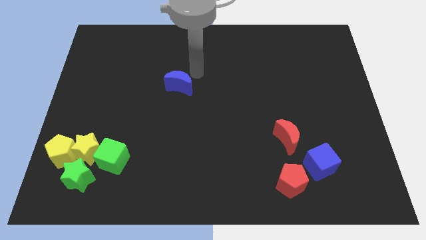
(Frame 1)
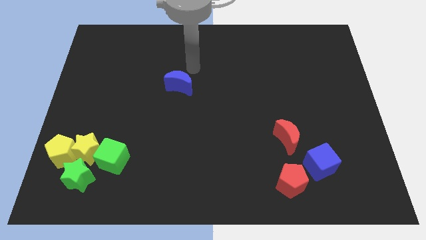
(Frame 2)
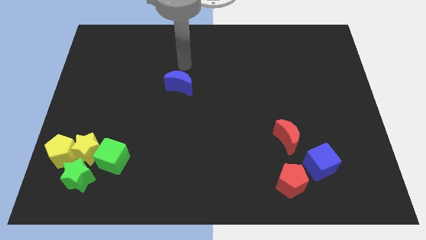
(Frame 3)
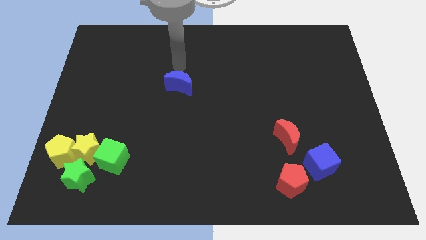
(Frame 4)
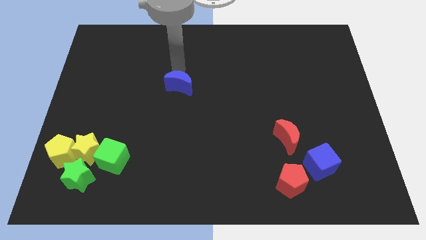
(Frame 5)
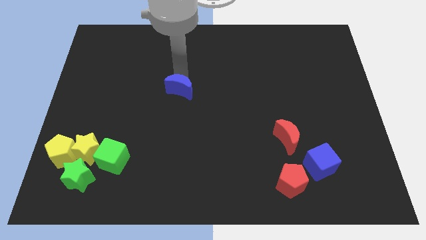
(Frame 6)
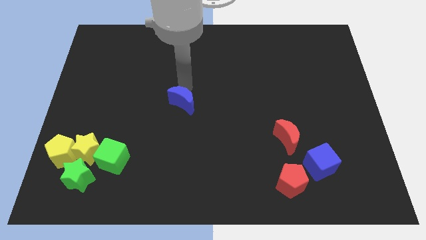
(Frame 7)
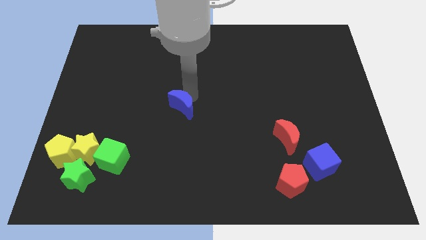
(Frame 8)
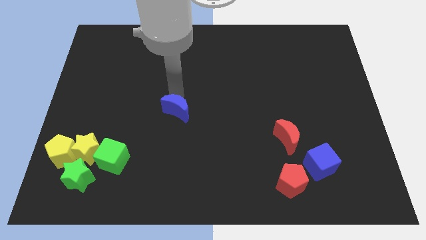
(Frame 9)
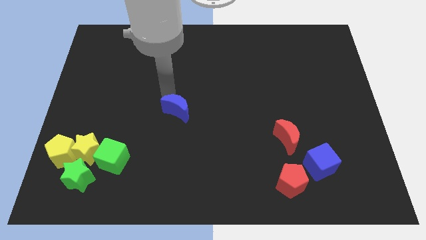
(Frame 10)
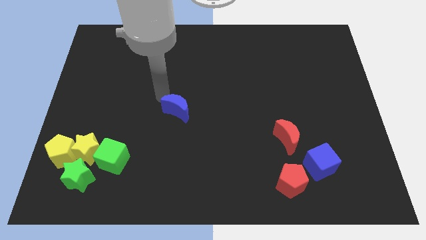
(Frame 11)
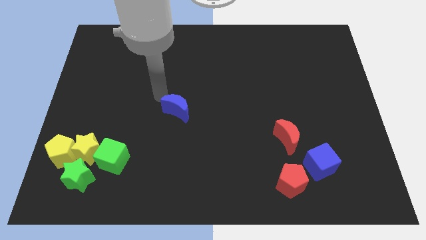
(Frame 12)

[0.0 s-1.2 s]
move the blue crescent to the bottom of the board

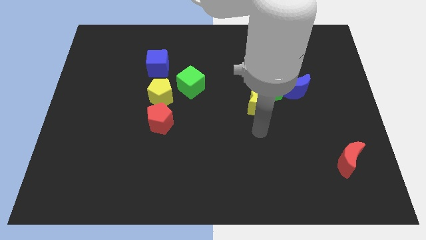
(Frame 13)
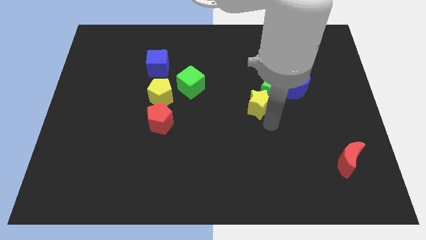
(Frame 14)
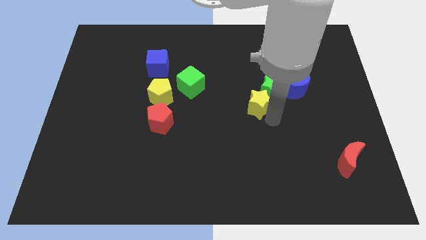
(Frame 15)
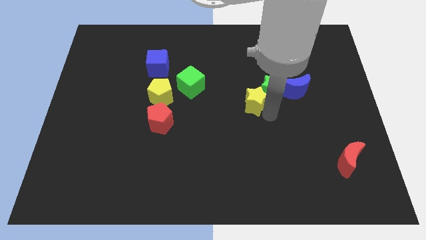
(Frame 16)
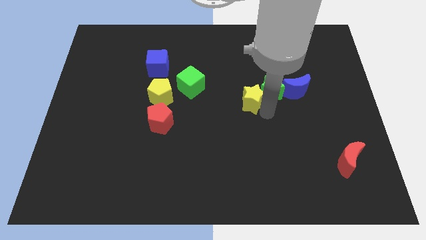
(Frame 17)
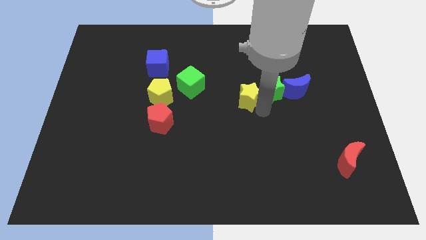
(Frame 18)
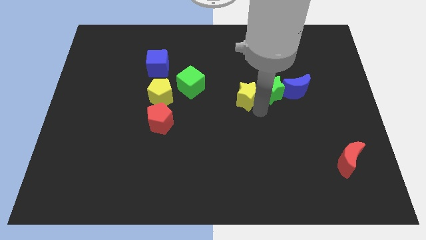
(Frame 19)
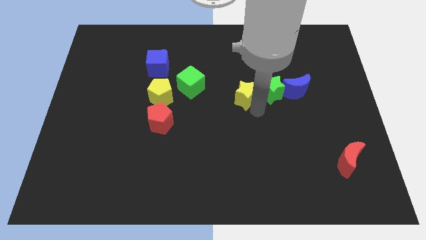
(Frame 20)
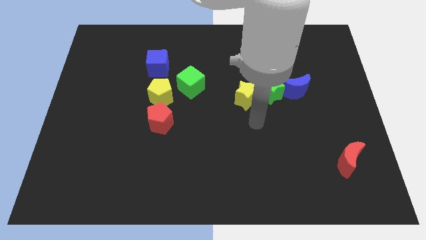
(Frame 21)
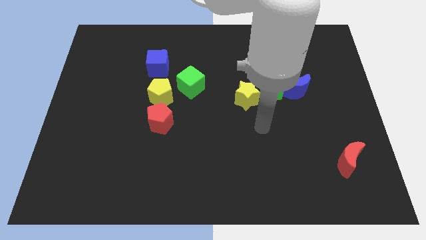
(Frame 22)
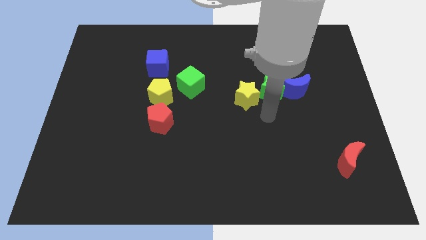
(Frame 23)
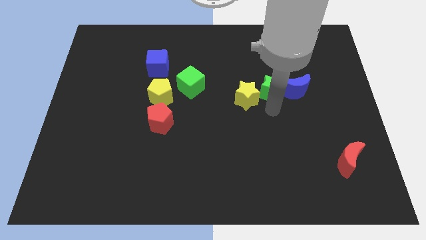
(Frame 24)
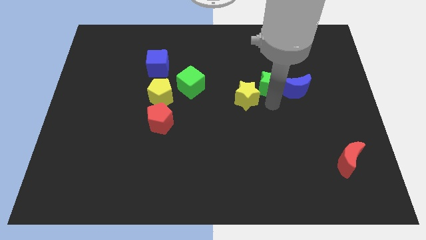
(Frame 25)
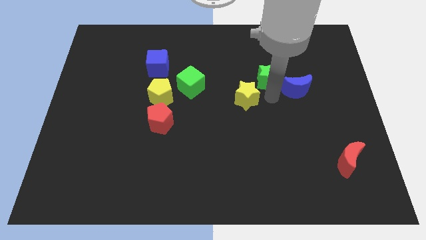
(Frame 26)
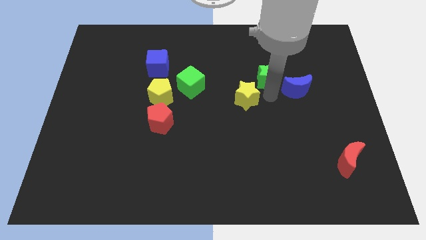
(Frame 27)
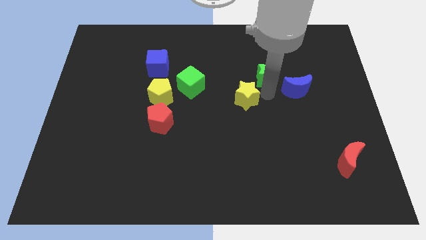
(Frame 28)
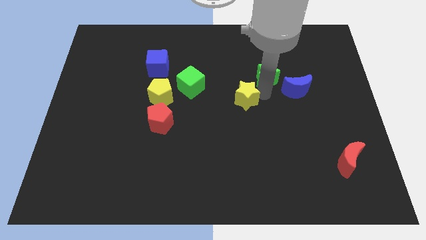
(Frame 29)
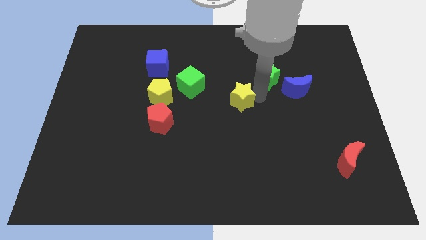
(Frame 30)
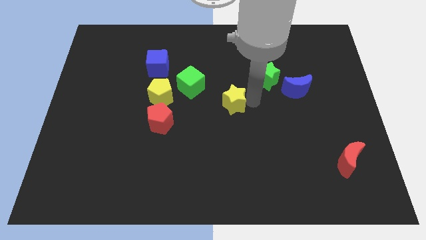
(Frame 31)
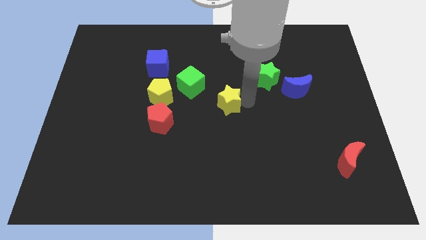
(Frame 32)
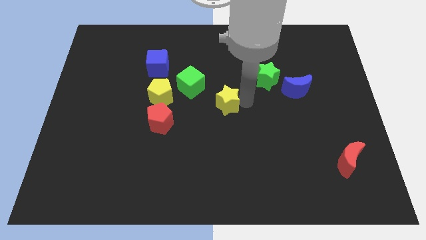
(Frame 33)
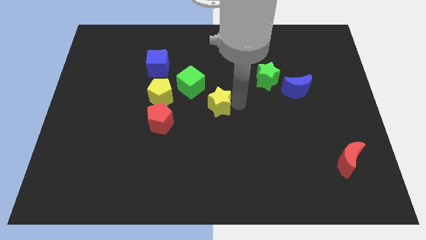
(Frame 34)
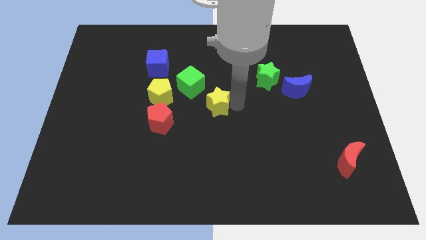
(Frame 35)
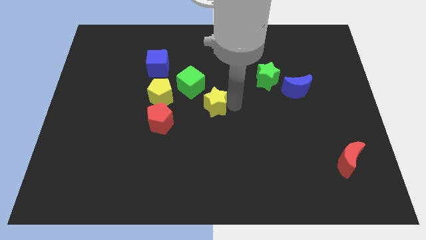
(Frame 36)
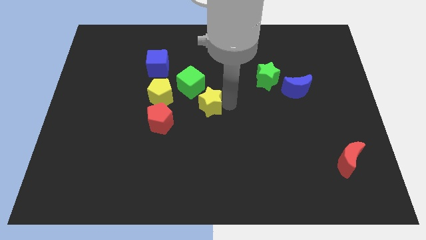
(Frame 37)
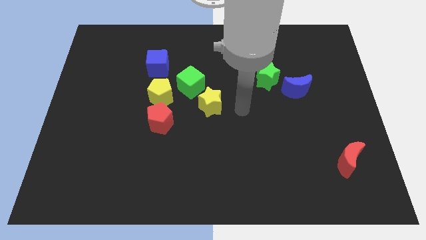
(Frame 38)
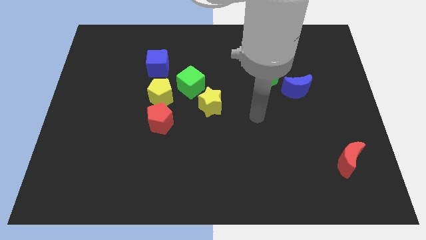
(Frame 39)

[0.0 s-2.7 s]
place the yellow star diagonal right to green cube

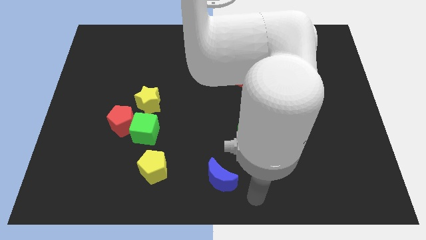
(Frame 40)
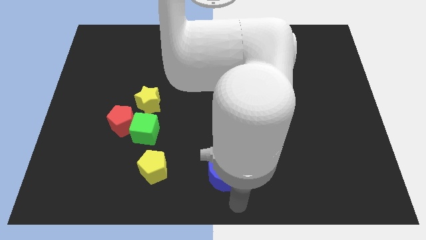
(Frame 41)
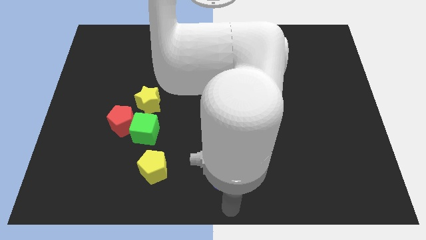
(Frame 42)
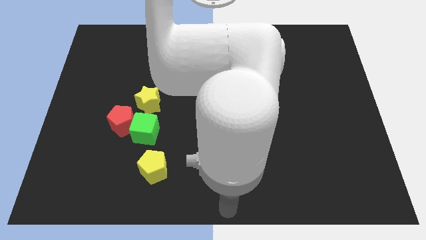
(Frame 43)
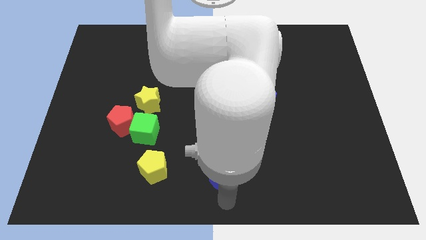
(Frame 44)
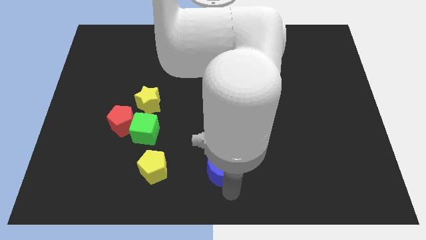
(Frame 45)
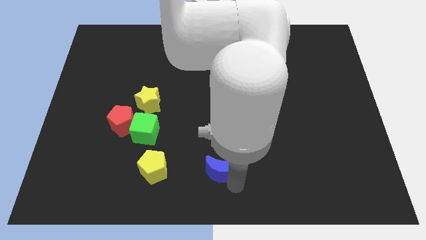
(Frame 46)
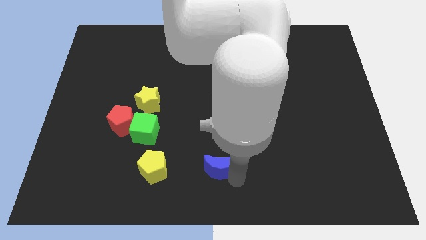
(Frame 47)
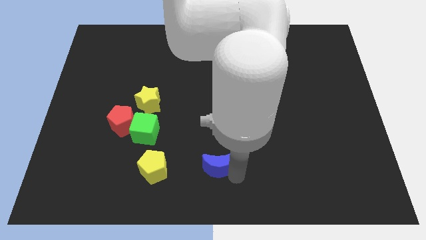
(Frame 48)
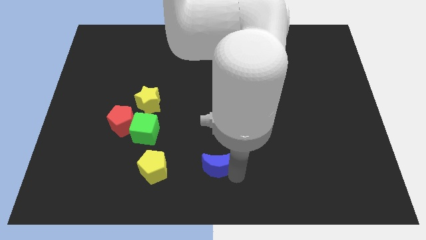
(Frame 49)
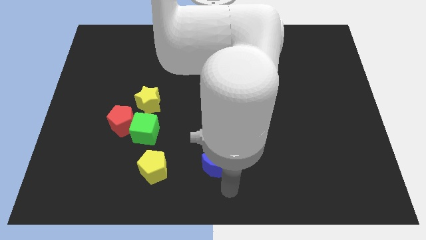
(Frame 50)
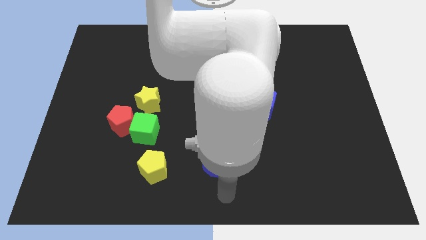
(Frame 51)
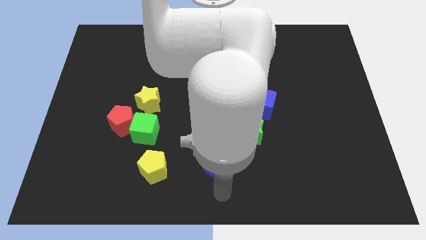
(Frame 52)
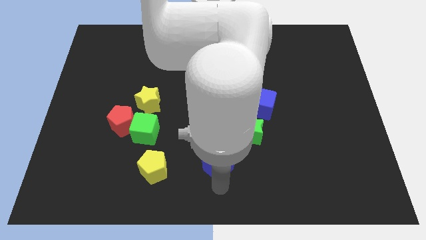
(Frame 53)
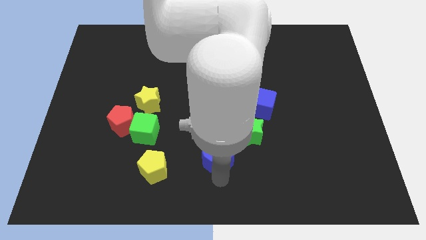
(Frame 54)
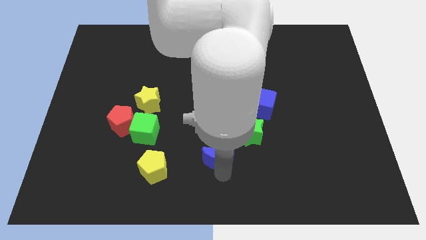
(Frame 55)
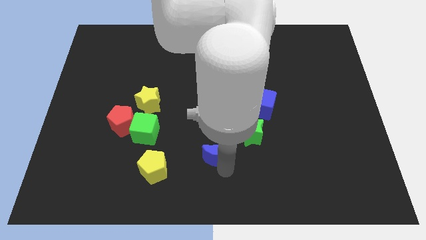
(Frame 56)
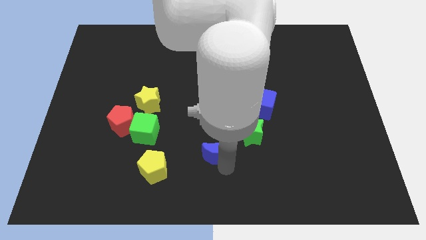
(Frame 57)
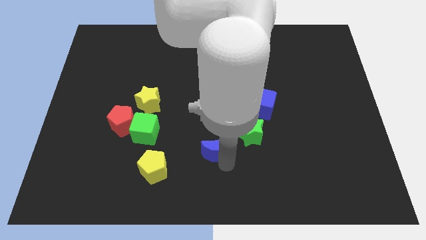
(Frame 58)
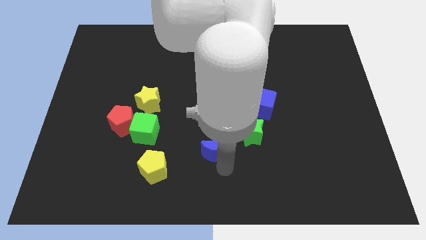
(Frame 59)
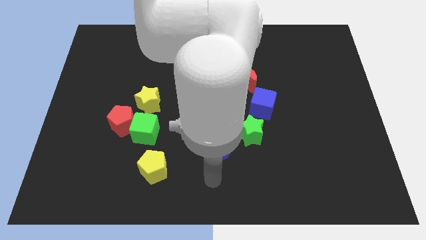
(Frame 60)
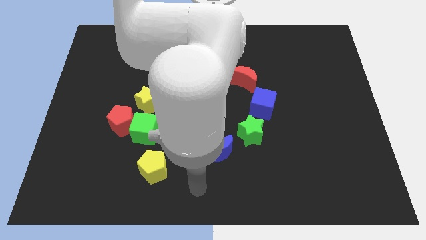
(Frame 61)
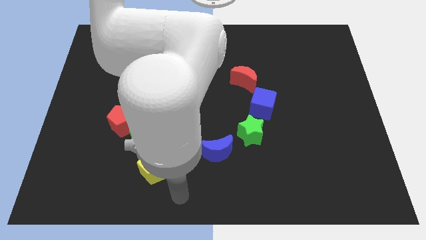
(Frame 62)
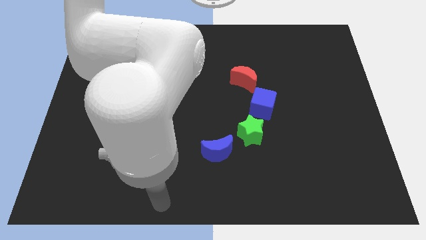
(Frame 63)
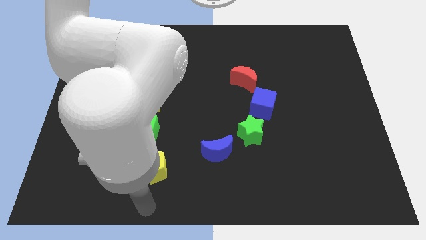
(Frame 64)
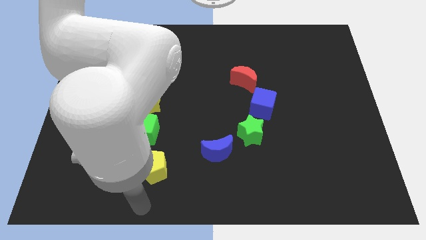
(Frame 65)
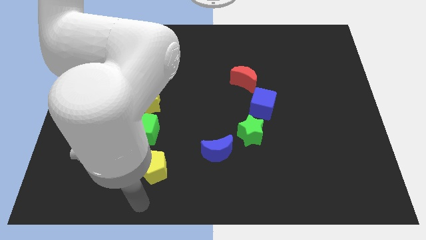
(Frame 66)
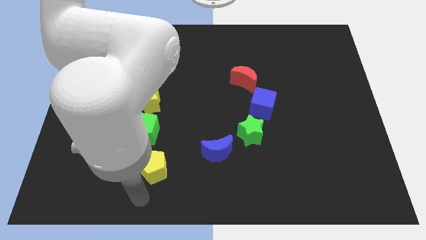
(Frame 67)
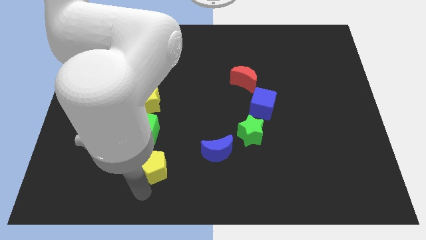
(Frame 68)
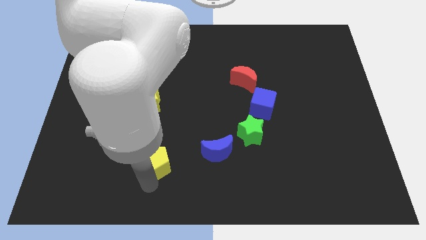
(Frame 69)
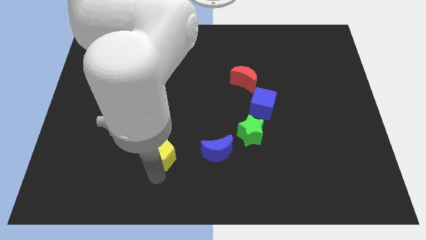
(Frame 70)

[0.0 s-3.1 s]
push the blue moon slightly upwards

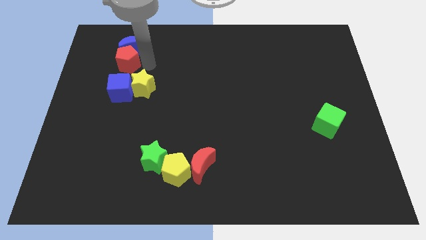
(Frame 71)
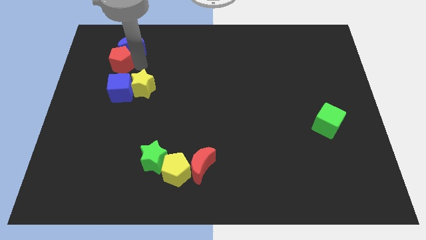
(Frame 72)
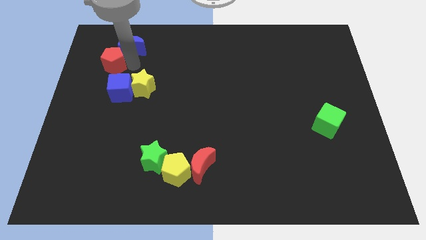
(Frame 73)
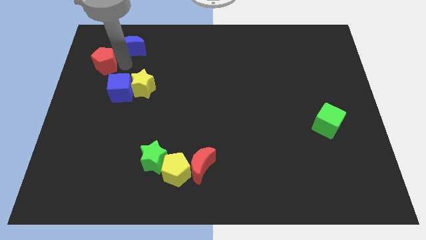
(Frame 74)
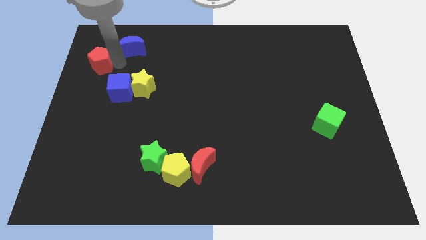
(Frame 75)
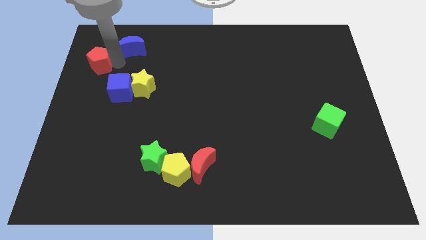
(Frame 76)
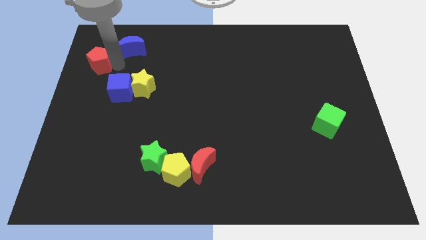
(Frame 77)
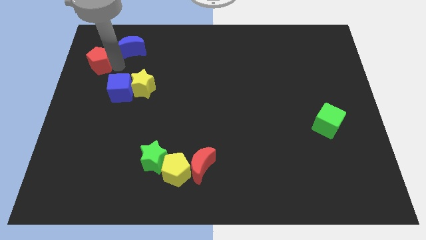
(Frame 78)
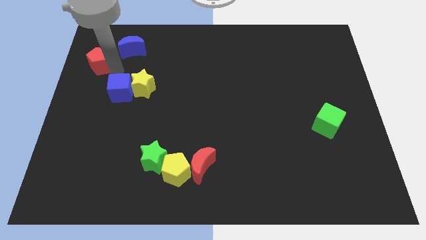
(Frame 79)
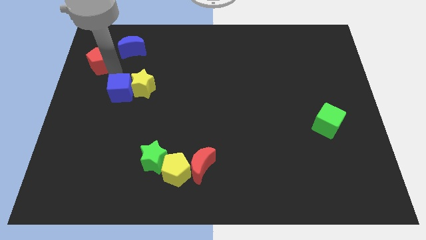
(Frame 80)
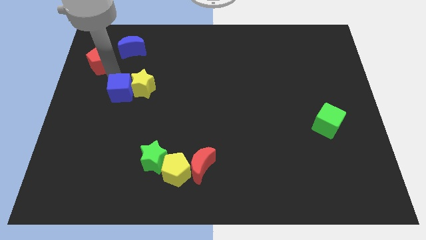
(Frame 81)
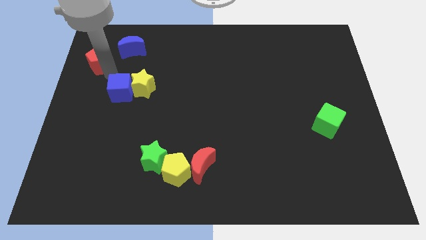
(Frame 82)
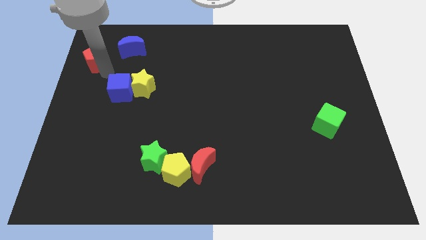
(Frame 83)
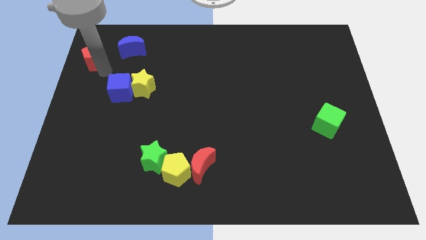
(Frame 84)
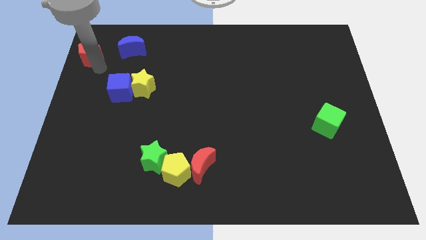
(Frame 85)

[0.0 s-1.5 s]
seperate red pentagon and blue cube

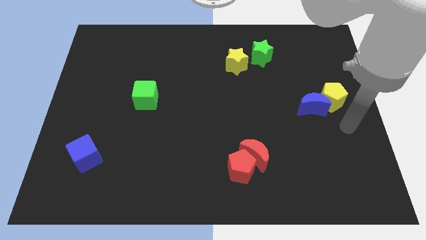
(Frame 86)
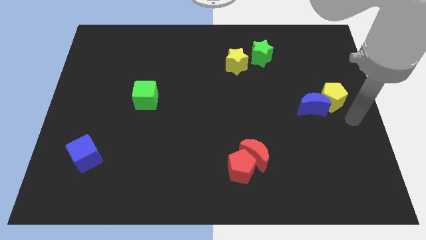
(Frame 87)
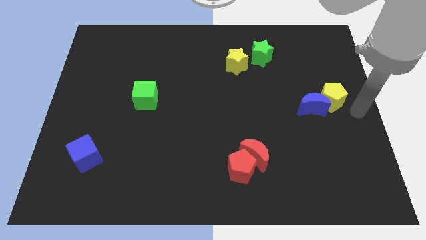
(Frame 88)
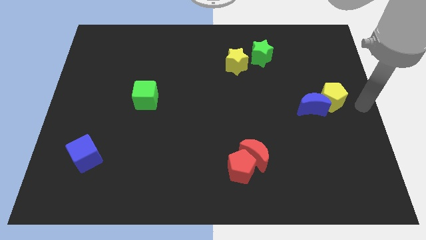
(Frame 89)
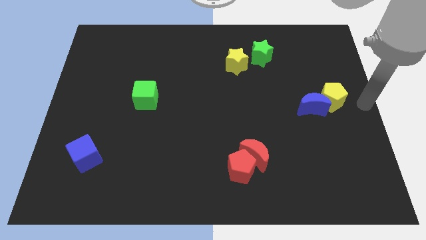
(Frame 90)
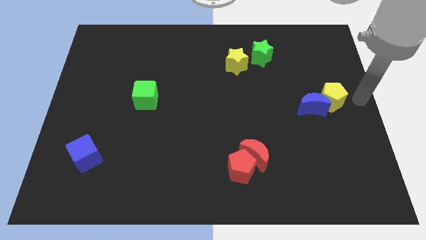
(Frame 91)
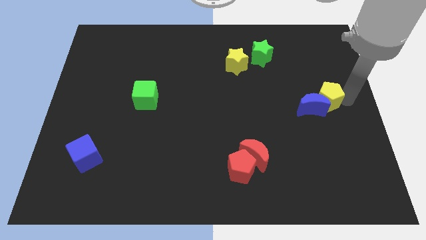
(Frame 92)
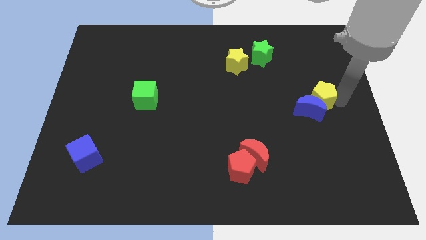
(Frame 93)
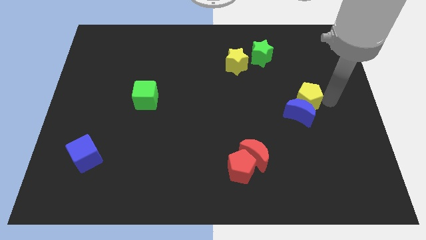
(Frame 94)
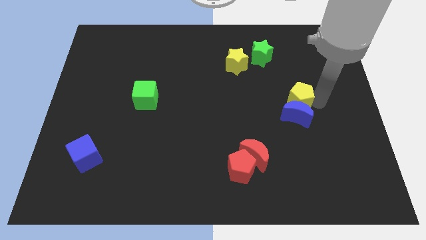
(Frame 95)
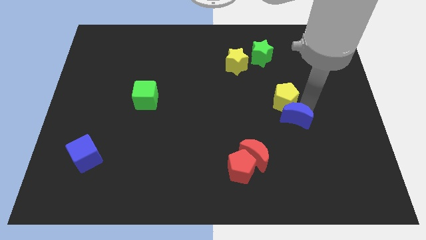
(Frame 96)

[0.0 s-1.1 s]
push the yellow pentagon and blue crescent towards the red crescent
